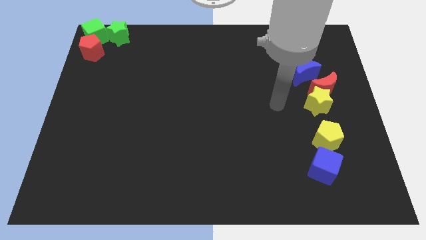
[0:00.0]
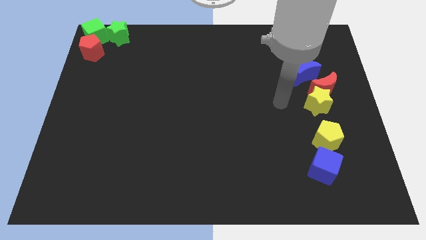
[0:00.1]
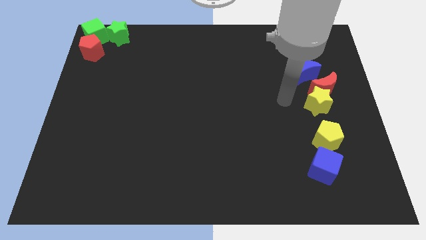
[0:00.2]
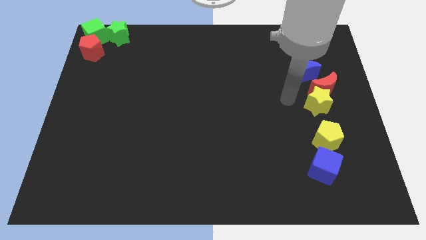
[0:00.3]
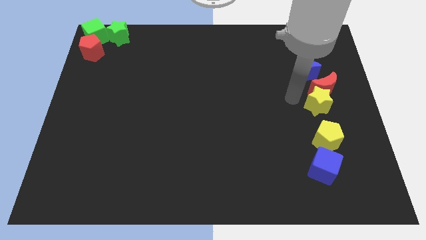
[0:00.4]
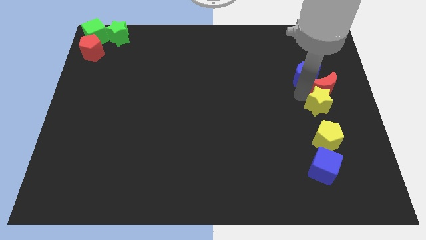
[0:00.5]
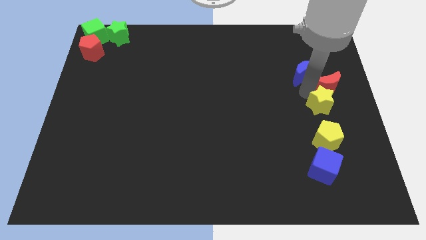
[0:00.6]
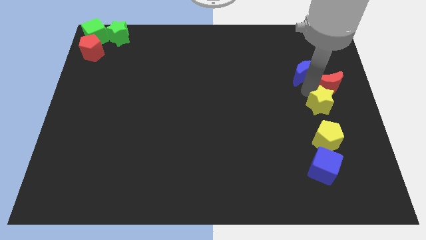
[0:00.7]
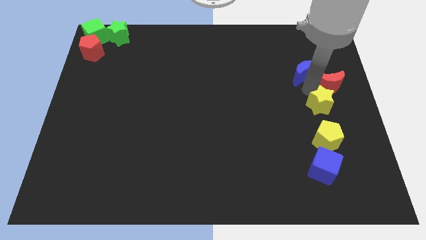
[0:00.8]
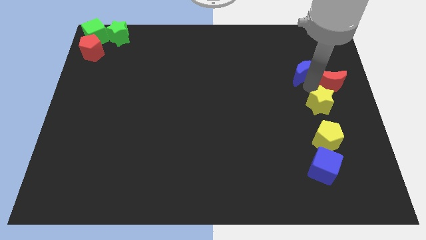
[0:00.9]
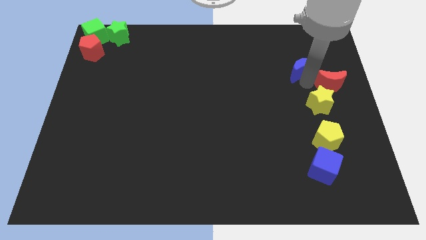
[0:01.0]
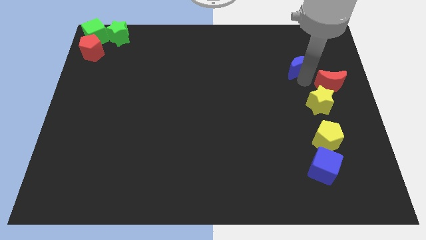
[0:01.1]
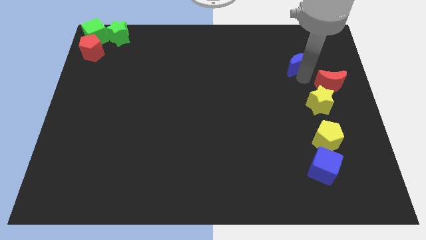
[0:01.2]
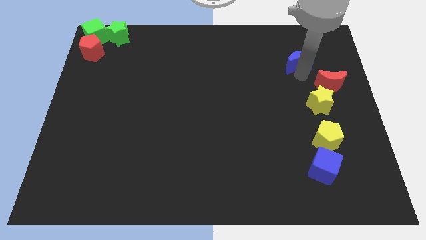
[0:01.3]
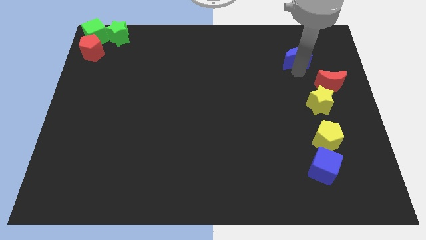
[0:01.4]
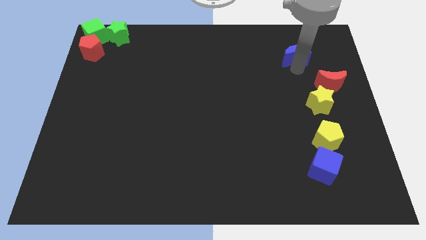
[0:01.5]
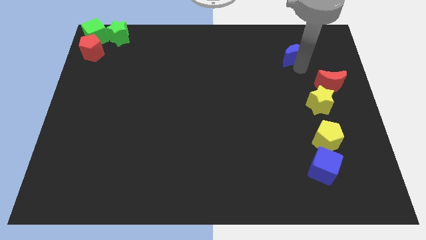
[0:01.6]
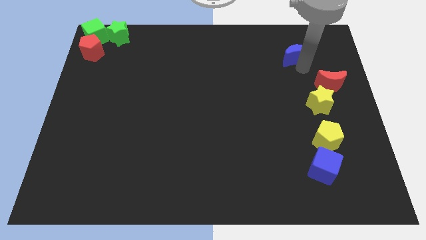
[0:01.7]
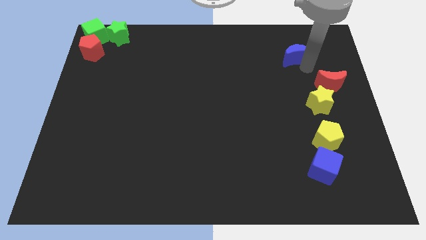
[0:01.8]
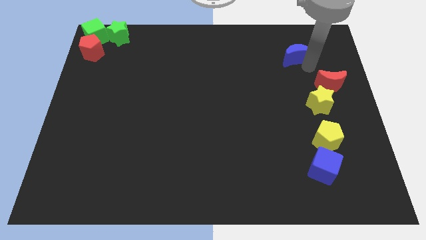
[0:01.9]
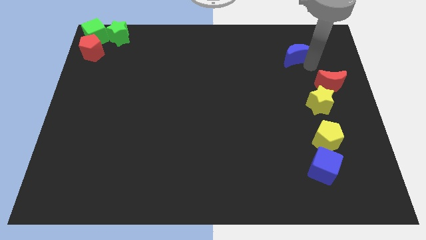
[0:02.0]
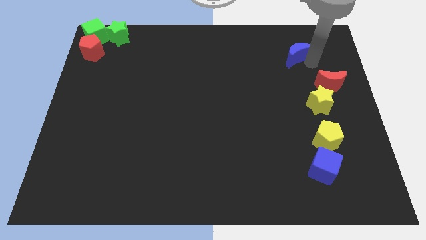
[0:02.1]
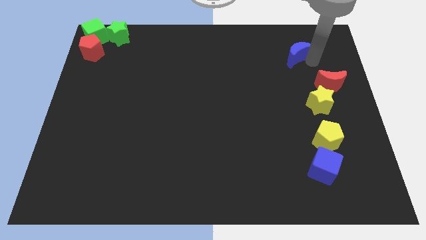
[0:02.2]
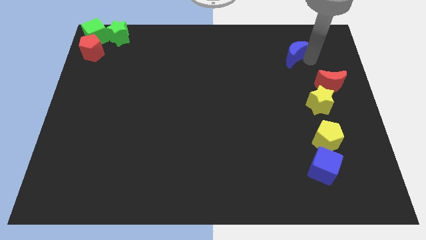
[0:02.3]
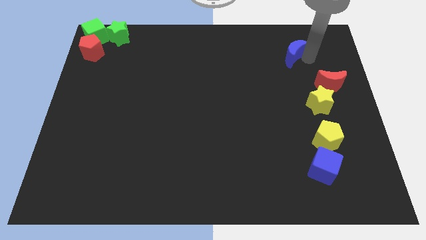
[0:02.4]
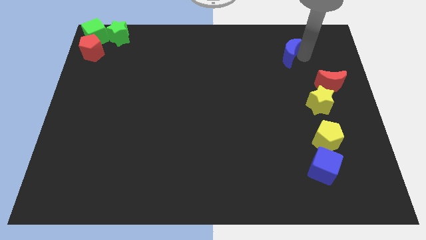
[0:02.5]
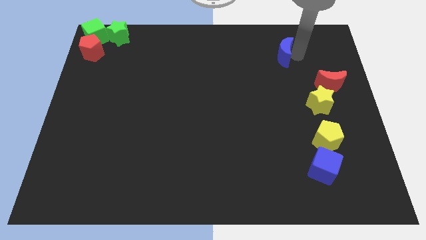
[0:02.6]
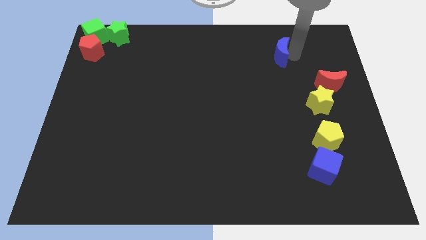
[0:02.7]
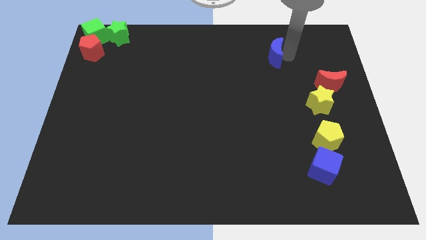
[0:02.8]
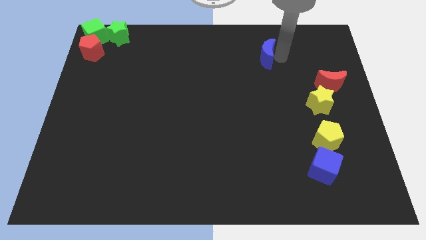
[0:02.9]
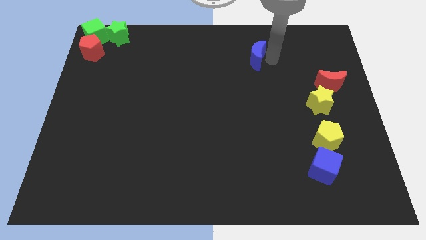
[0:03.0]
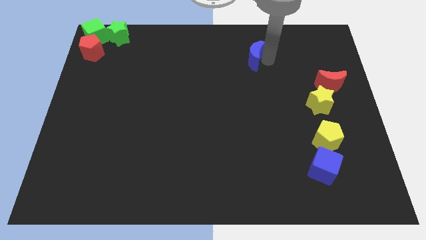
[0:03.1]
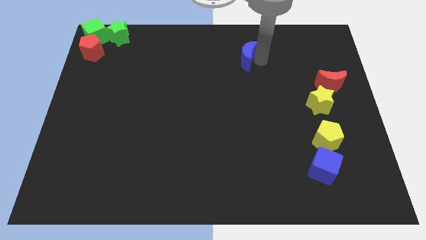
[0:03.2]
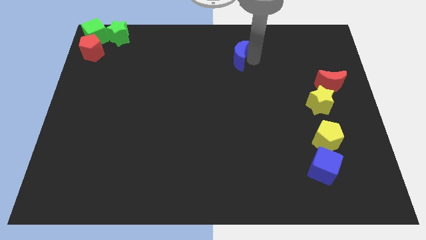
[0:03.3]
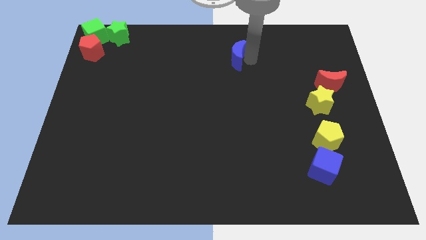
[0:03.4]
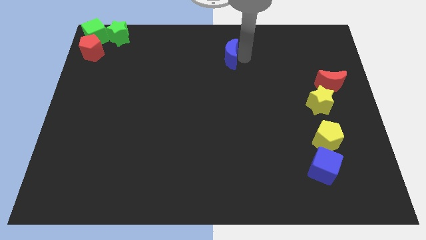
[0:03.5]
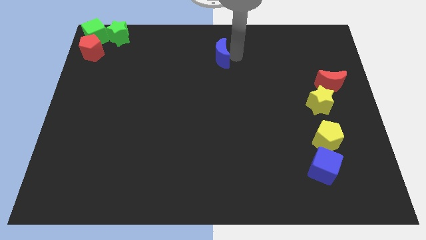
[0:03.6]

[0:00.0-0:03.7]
push the blue crescent to the top center of the board

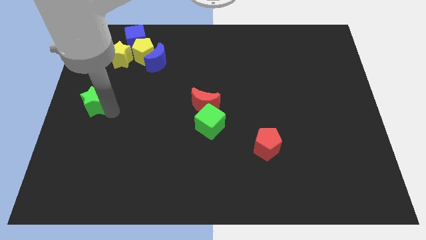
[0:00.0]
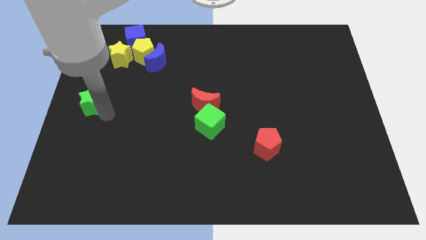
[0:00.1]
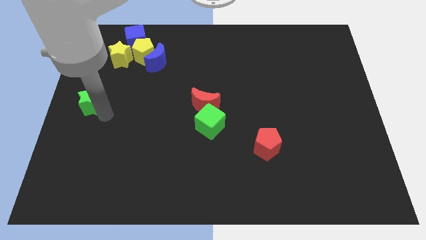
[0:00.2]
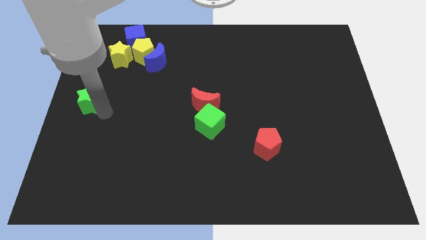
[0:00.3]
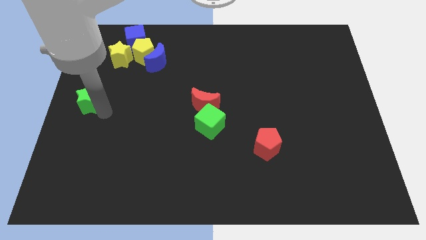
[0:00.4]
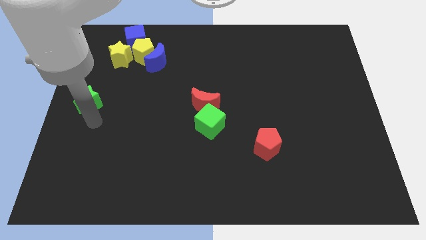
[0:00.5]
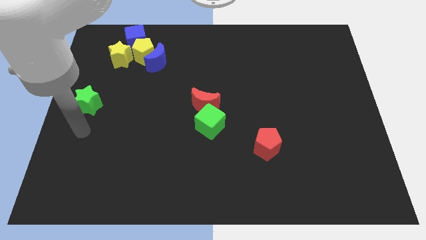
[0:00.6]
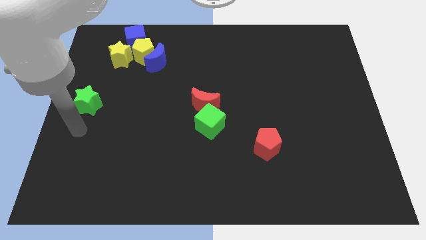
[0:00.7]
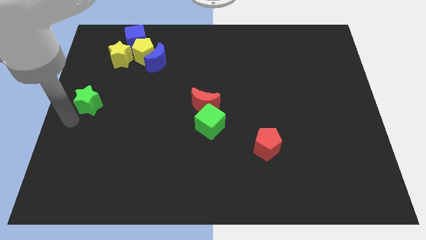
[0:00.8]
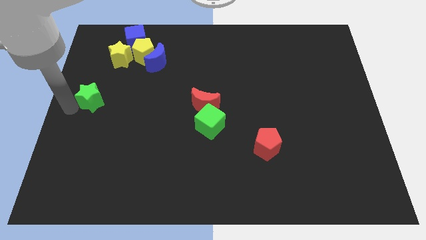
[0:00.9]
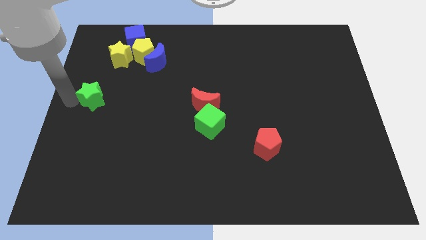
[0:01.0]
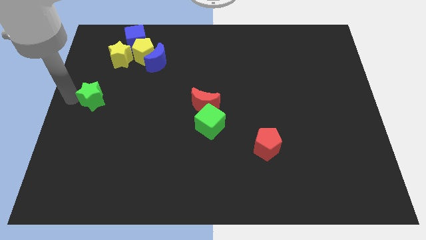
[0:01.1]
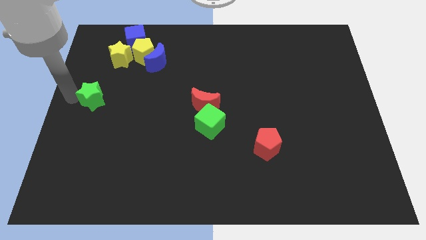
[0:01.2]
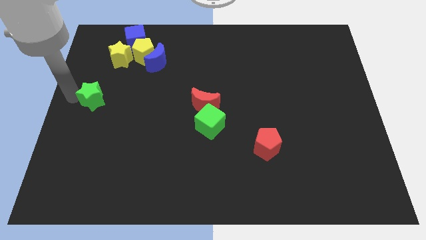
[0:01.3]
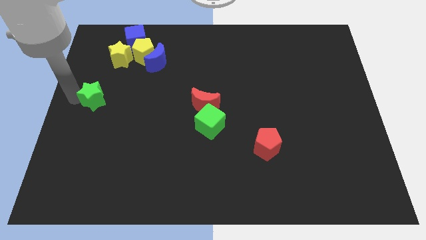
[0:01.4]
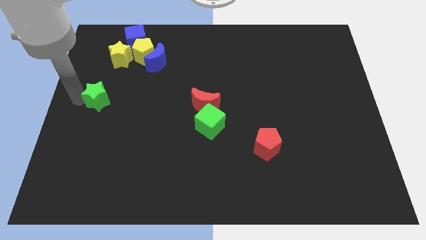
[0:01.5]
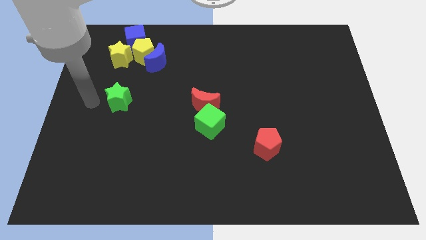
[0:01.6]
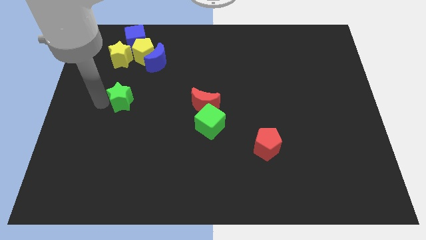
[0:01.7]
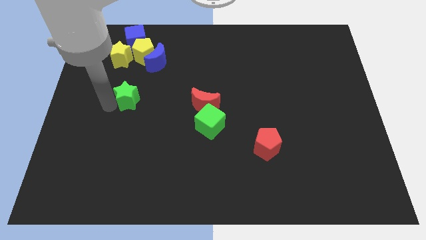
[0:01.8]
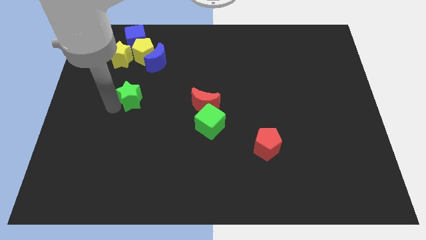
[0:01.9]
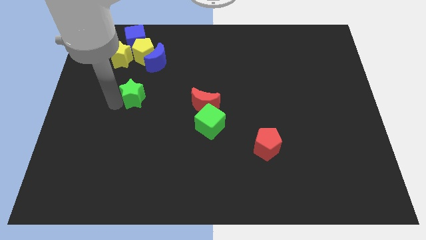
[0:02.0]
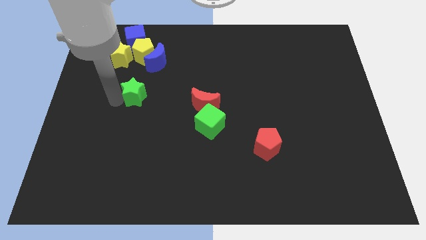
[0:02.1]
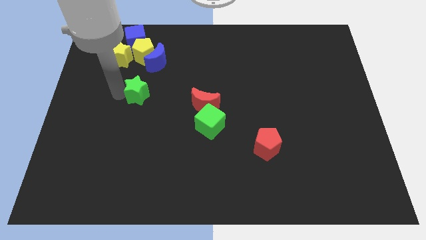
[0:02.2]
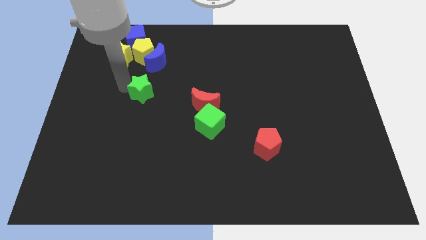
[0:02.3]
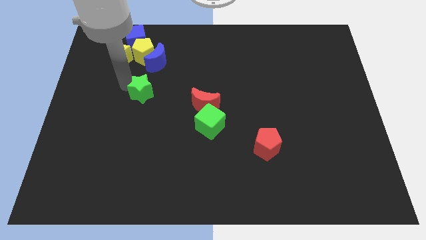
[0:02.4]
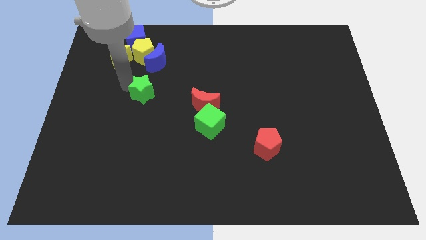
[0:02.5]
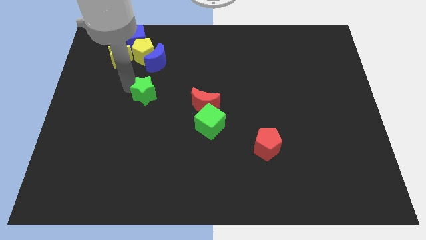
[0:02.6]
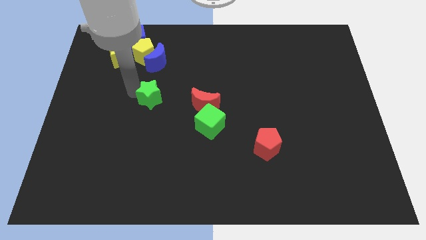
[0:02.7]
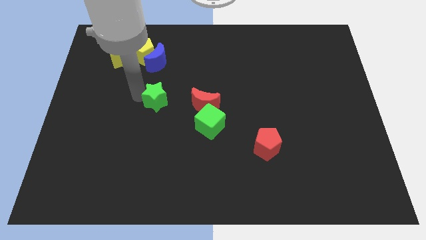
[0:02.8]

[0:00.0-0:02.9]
move the green star under the blue crescent

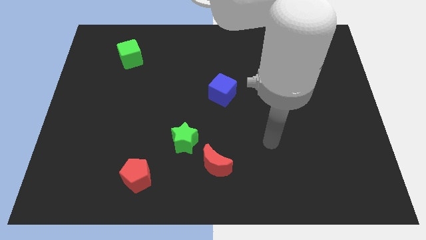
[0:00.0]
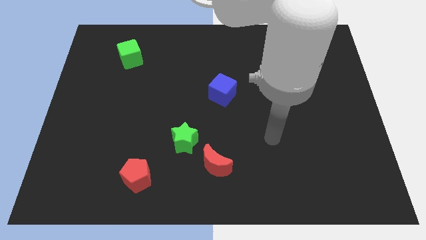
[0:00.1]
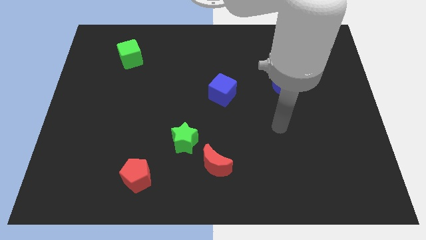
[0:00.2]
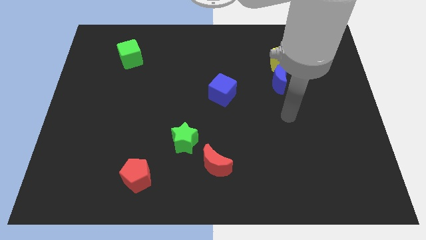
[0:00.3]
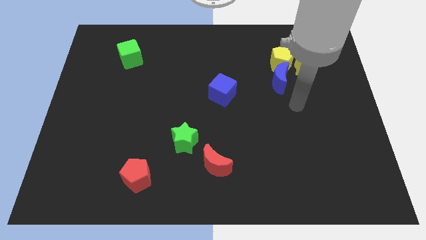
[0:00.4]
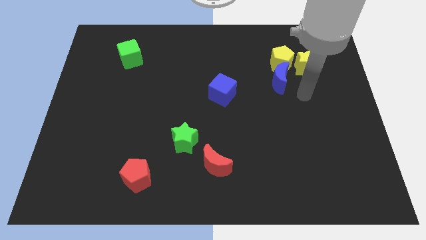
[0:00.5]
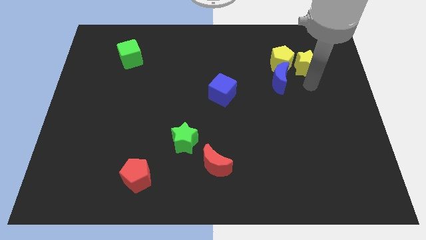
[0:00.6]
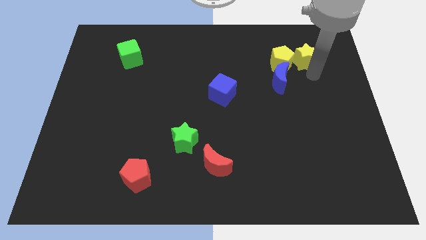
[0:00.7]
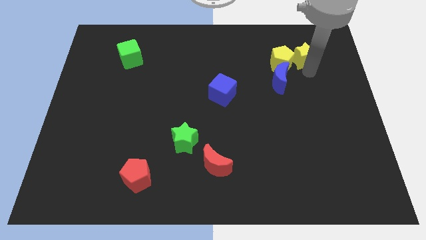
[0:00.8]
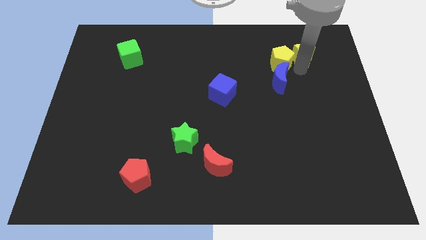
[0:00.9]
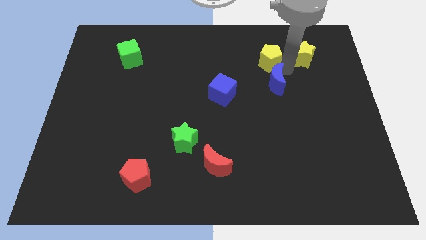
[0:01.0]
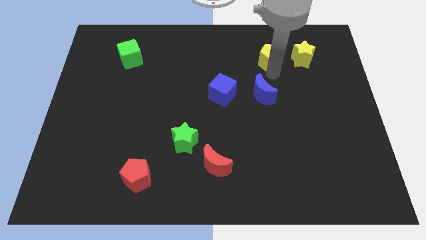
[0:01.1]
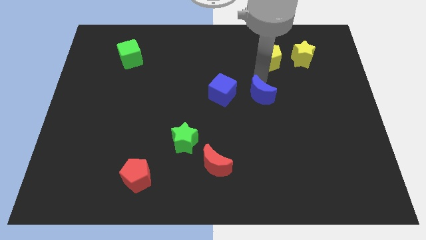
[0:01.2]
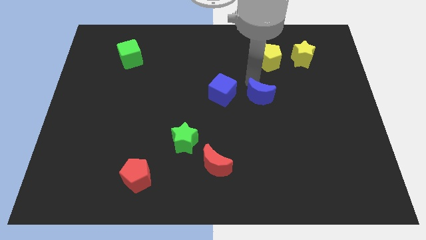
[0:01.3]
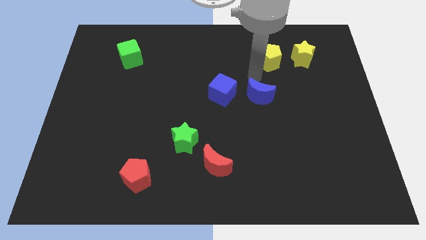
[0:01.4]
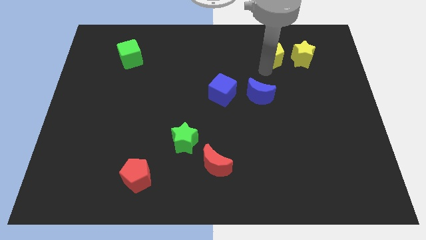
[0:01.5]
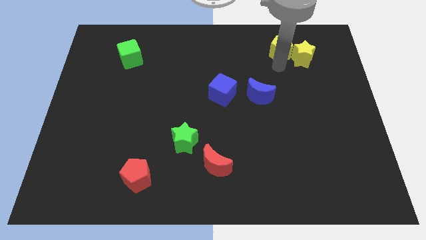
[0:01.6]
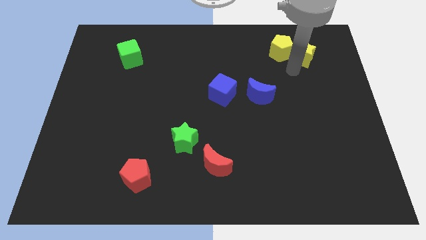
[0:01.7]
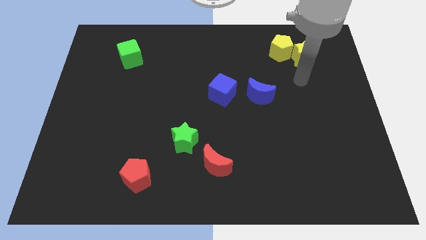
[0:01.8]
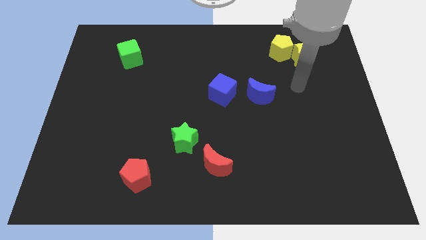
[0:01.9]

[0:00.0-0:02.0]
separate the yellow pentagon from the blue crescent
